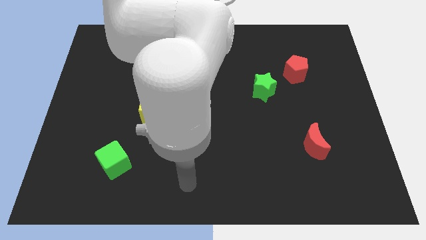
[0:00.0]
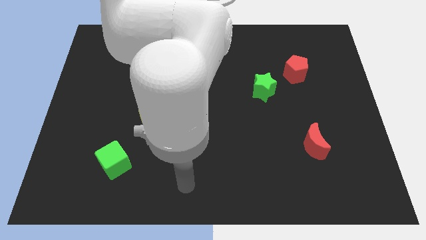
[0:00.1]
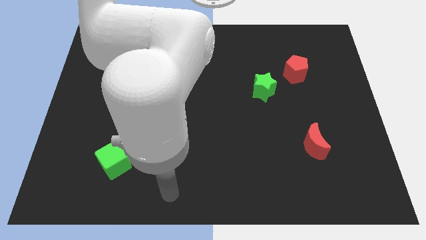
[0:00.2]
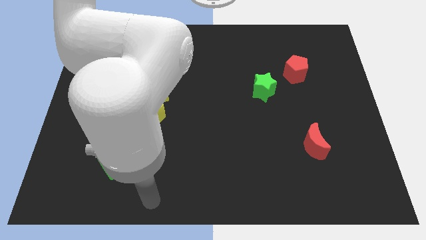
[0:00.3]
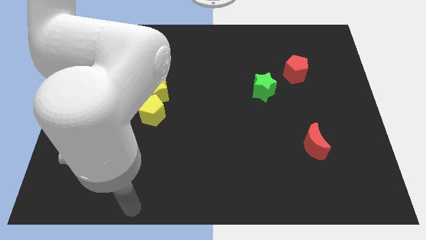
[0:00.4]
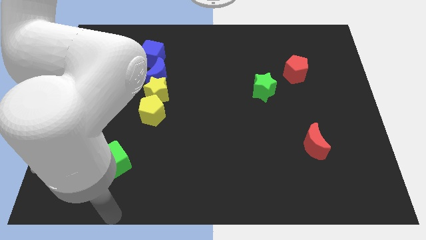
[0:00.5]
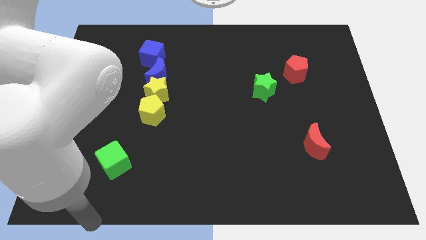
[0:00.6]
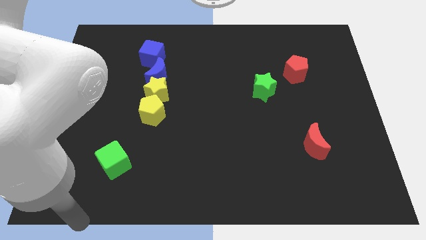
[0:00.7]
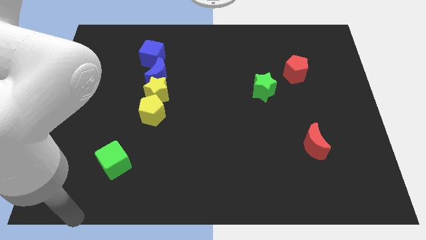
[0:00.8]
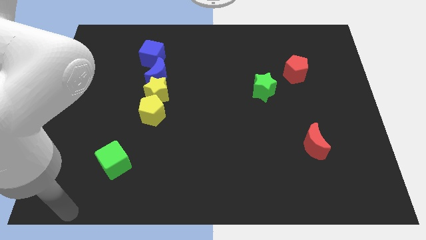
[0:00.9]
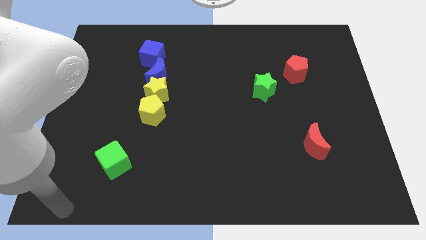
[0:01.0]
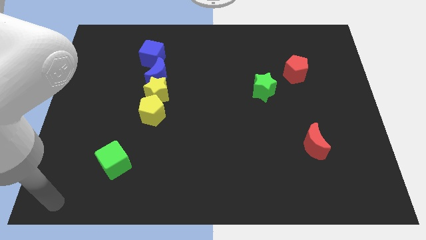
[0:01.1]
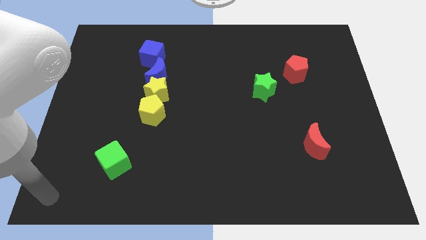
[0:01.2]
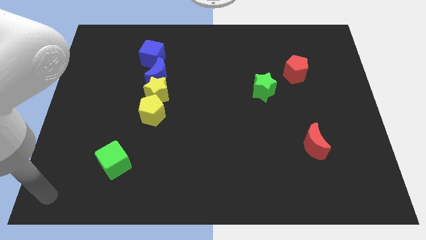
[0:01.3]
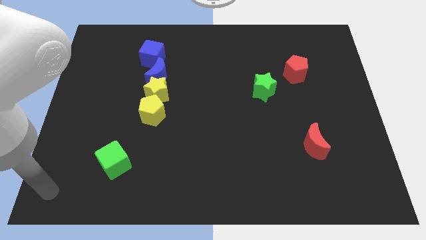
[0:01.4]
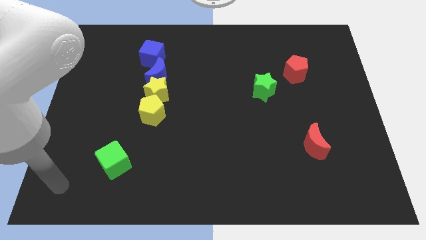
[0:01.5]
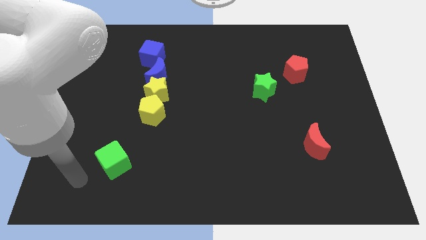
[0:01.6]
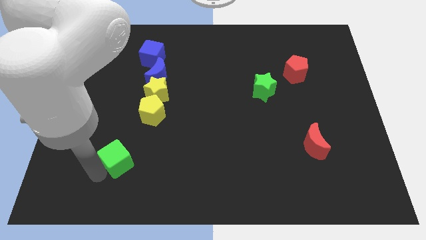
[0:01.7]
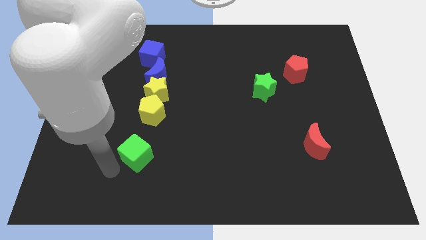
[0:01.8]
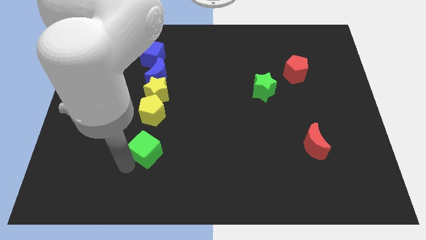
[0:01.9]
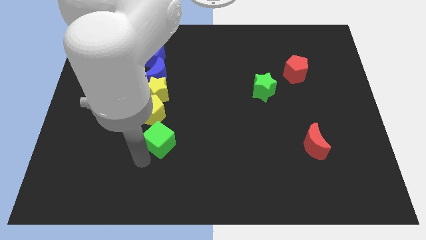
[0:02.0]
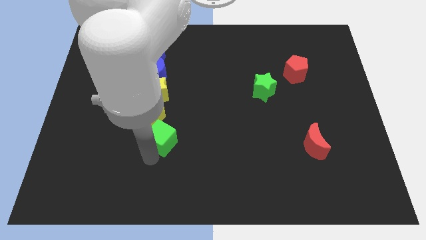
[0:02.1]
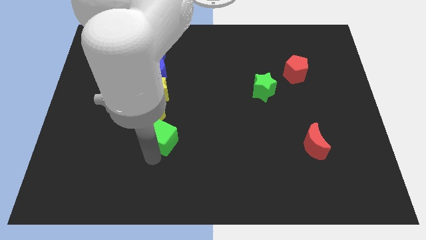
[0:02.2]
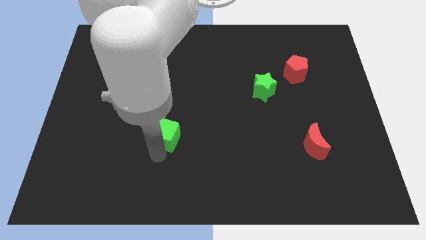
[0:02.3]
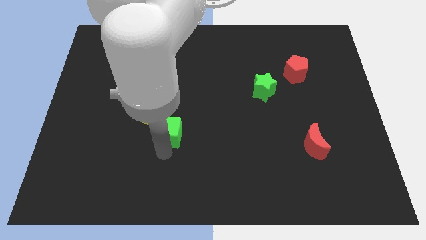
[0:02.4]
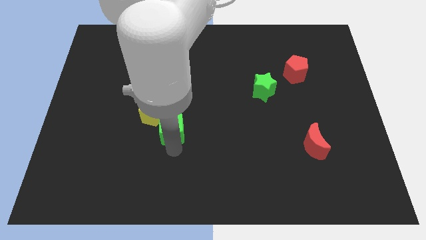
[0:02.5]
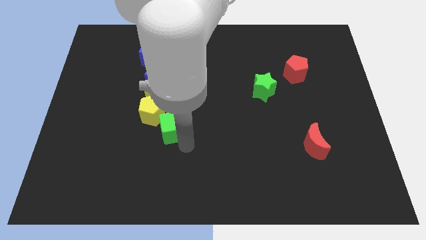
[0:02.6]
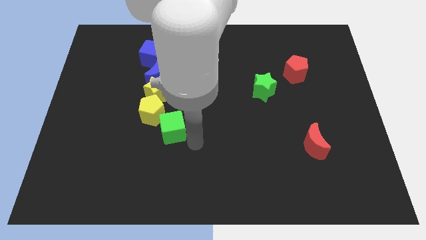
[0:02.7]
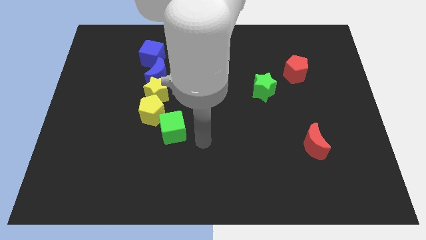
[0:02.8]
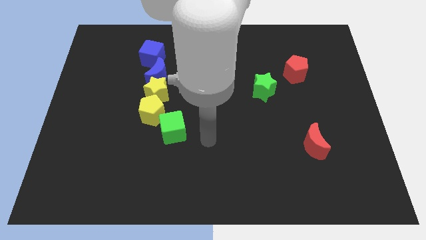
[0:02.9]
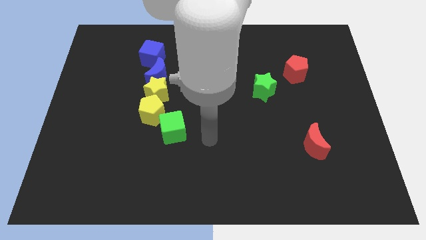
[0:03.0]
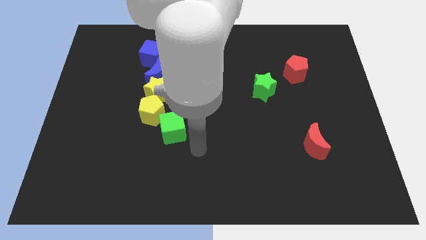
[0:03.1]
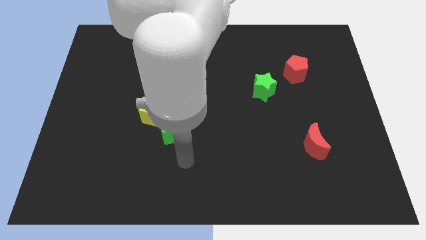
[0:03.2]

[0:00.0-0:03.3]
place the green cube close to the yellow pentagon

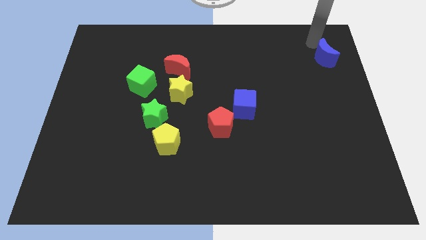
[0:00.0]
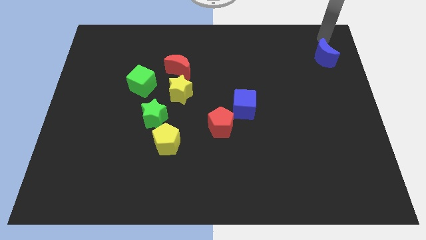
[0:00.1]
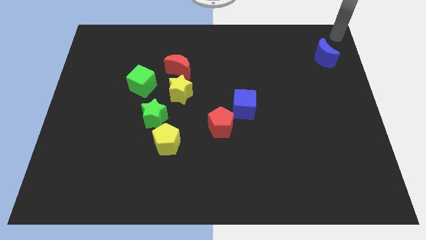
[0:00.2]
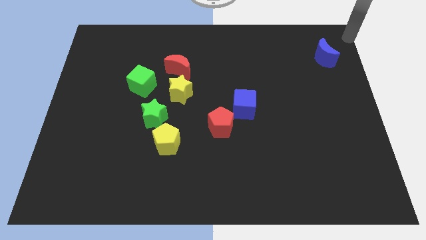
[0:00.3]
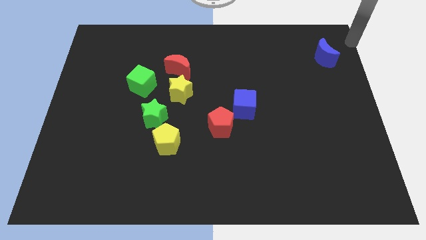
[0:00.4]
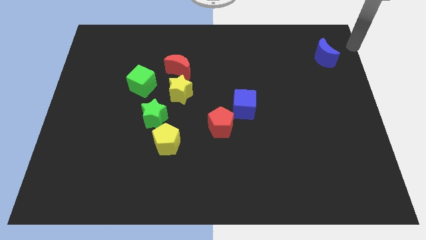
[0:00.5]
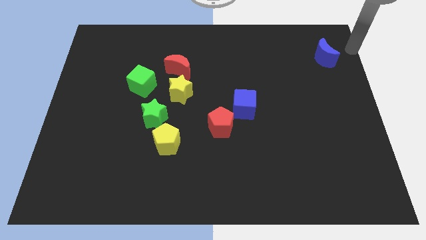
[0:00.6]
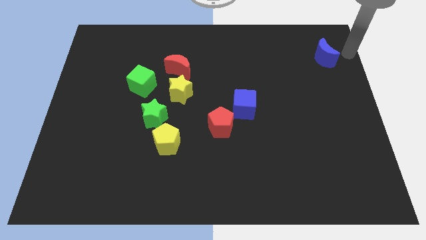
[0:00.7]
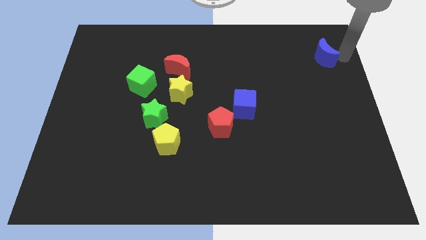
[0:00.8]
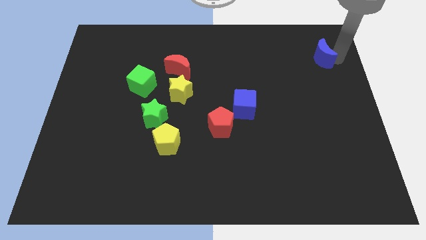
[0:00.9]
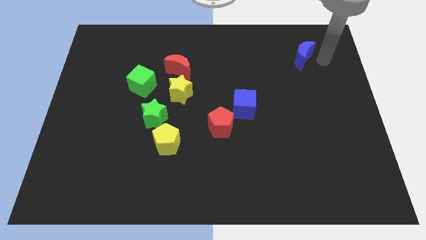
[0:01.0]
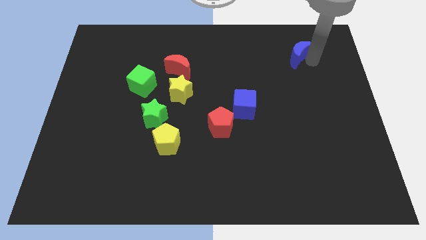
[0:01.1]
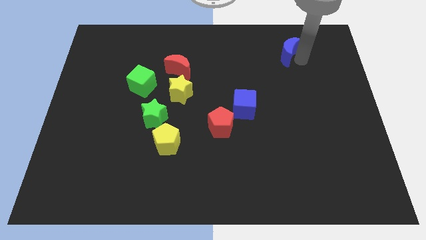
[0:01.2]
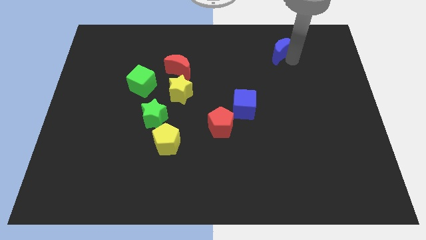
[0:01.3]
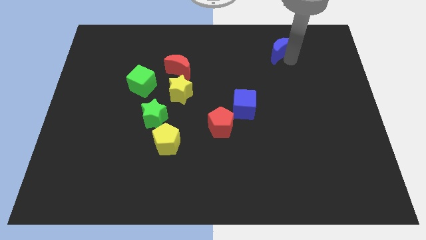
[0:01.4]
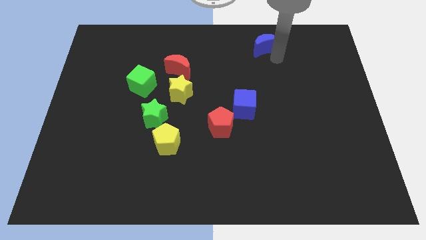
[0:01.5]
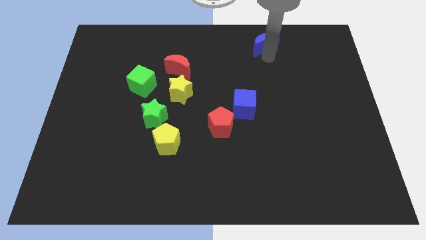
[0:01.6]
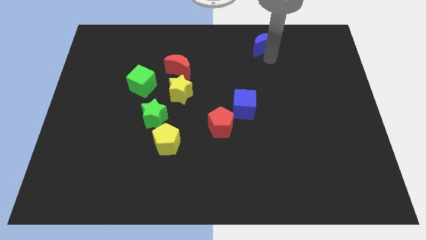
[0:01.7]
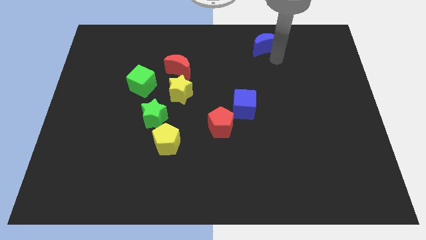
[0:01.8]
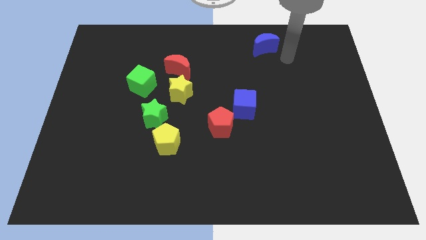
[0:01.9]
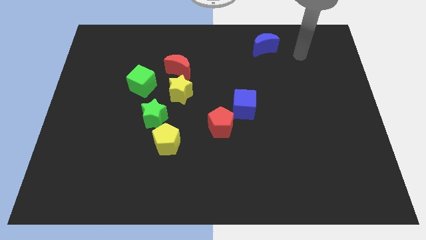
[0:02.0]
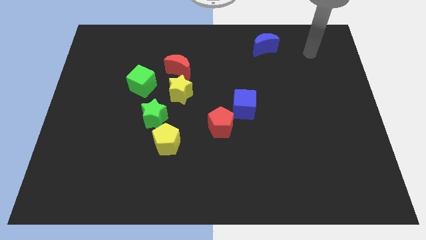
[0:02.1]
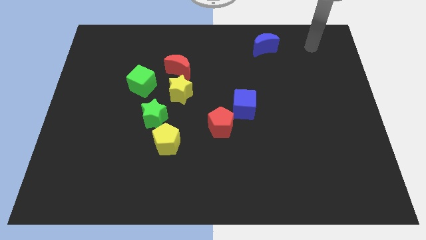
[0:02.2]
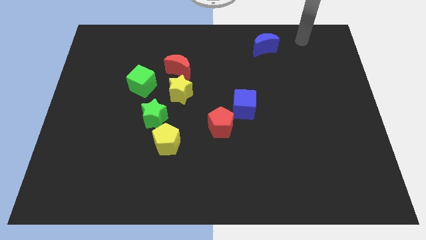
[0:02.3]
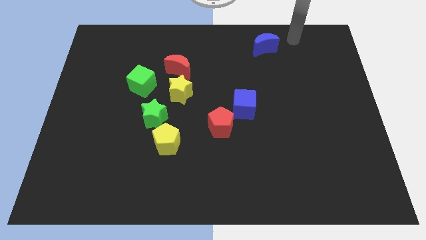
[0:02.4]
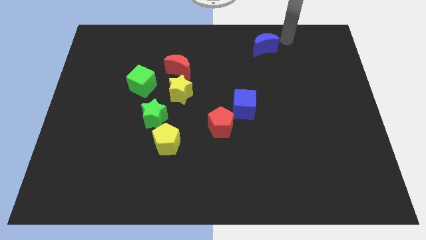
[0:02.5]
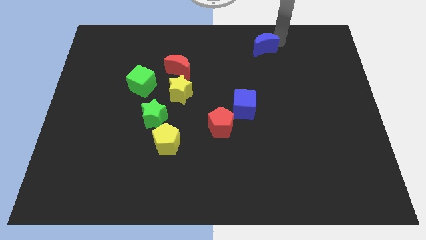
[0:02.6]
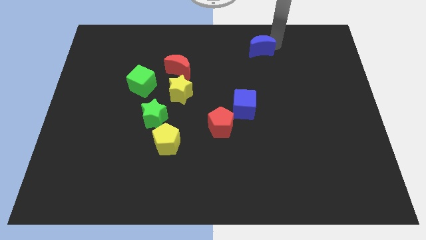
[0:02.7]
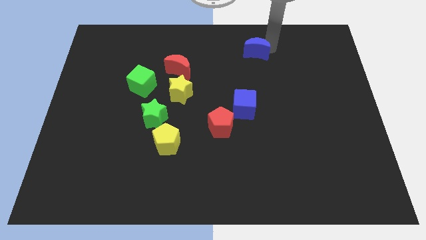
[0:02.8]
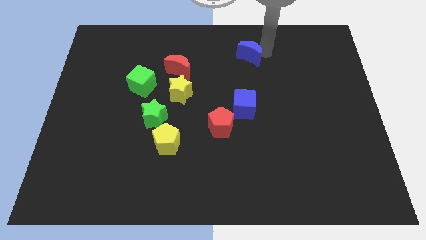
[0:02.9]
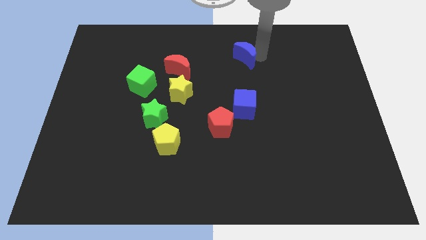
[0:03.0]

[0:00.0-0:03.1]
place blue moon above blue cube

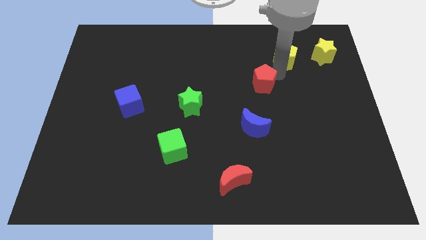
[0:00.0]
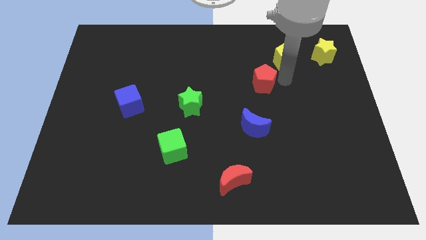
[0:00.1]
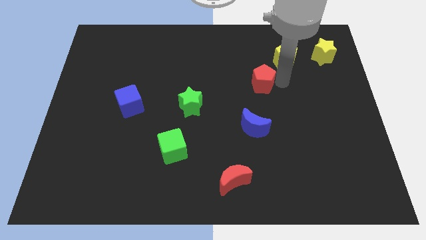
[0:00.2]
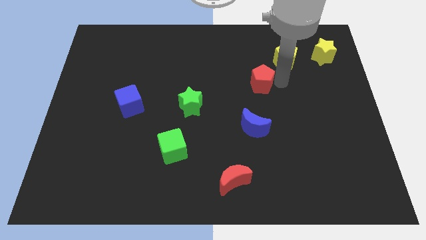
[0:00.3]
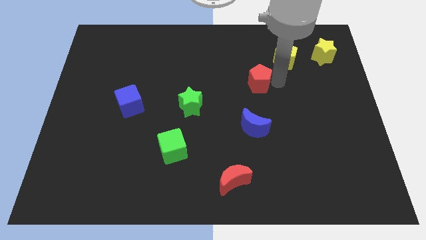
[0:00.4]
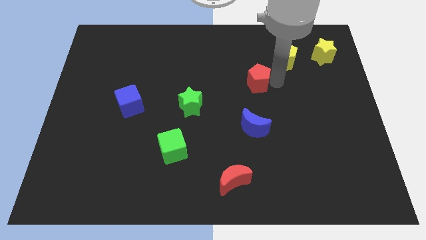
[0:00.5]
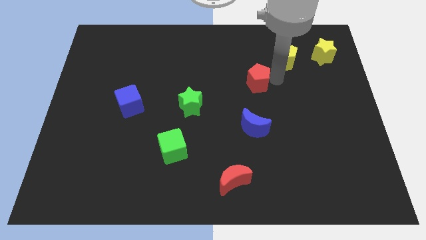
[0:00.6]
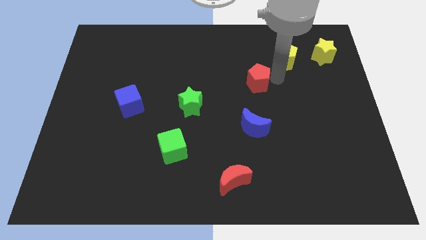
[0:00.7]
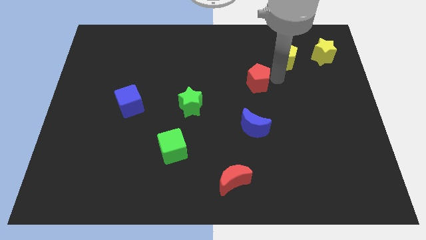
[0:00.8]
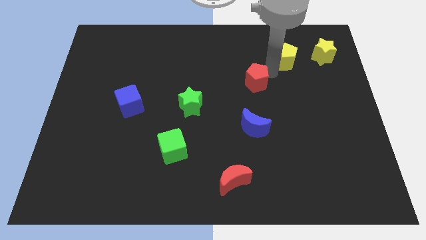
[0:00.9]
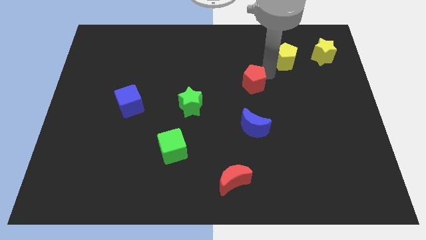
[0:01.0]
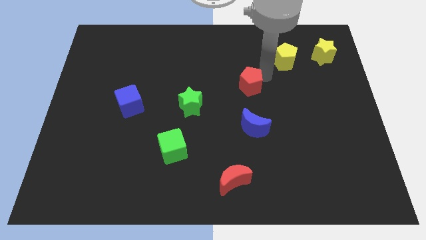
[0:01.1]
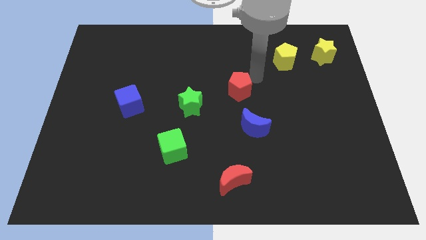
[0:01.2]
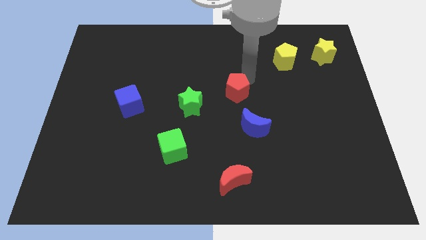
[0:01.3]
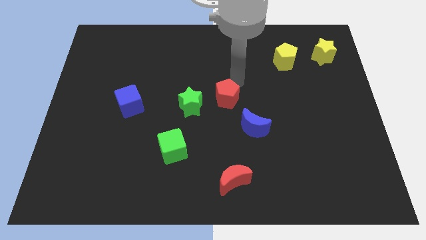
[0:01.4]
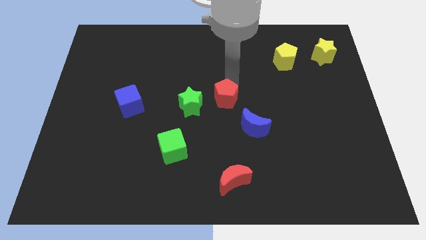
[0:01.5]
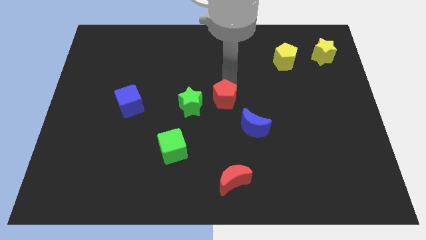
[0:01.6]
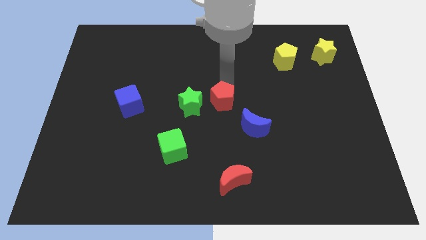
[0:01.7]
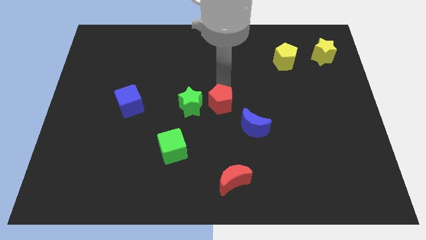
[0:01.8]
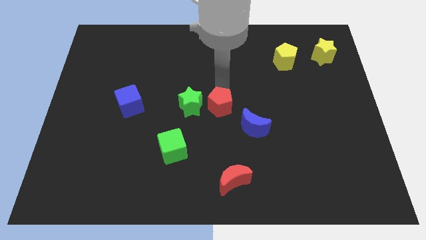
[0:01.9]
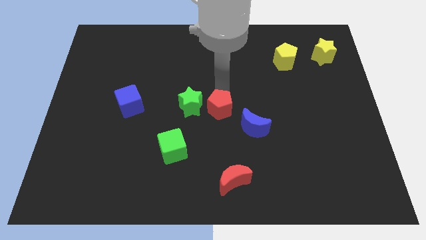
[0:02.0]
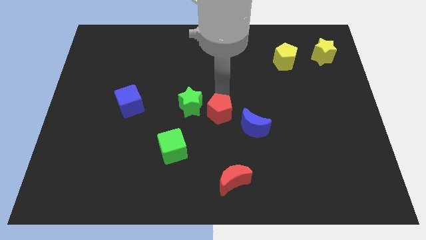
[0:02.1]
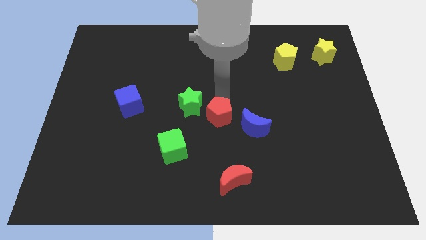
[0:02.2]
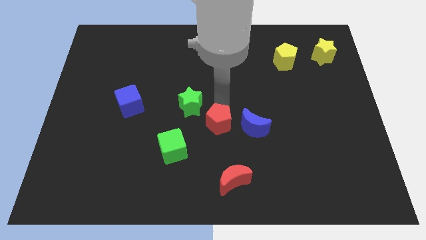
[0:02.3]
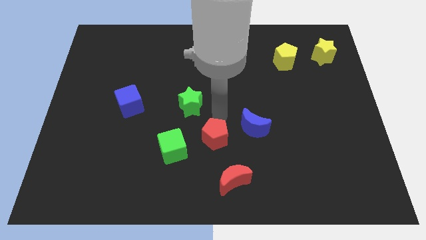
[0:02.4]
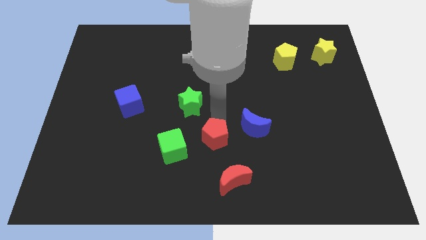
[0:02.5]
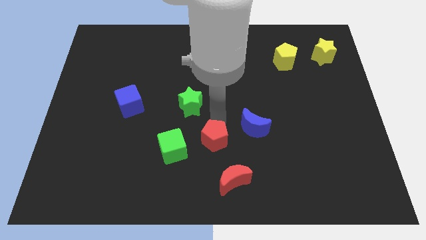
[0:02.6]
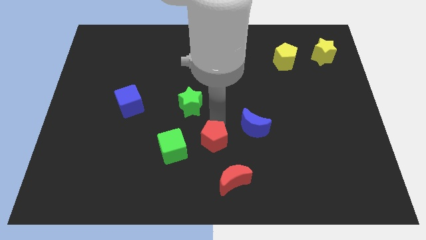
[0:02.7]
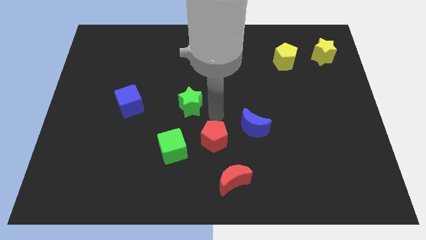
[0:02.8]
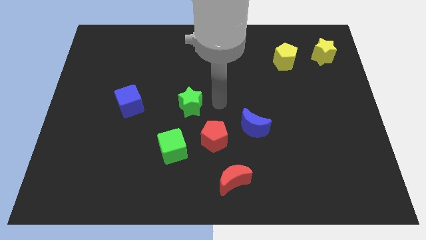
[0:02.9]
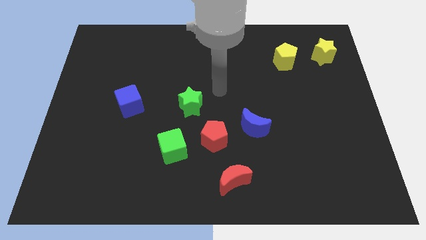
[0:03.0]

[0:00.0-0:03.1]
place the red pentagon in between the green cube and blue crescent
